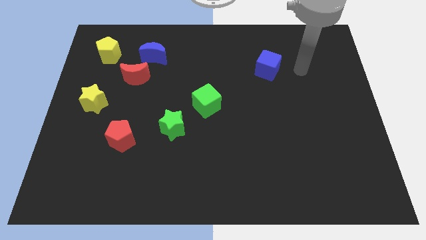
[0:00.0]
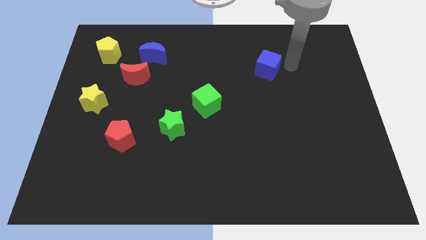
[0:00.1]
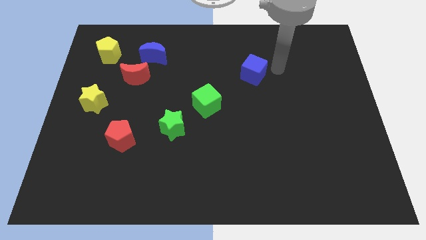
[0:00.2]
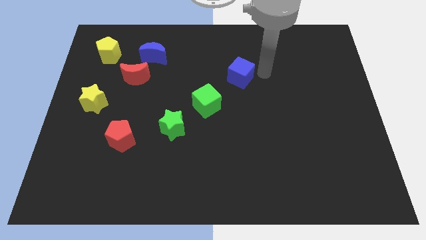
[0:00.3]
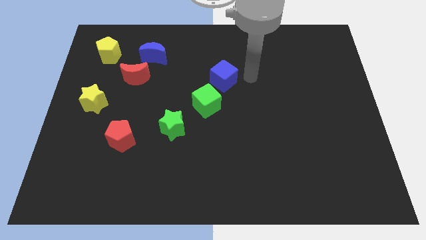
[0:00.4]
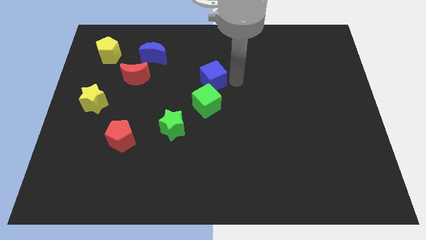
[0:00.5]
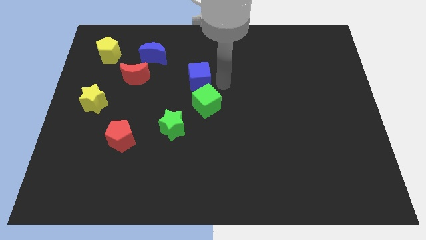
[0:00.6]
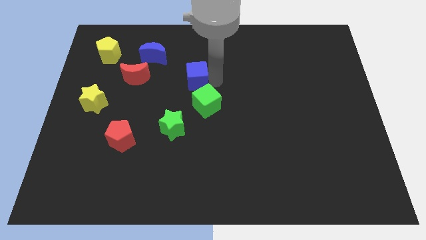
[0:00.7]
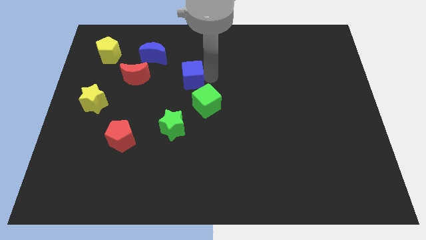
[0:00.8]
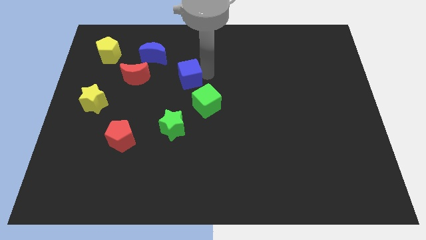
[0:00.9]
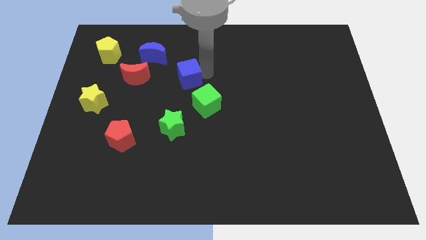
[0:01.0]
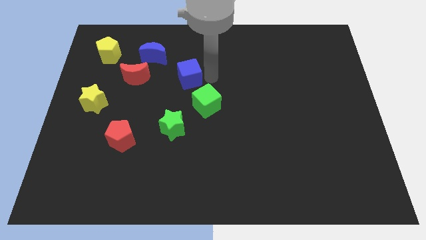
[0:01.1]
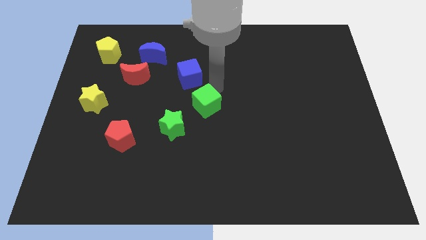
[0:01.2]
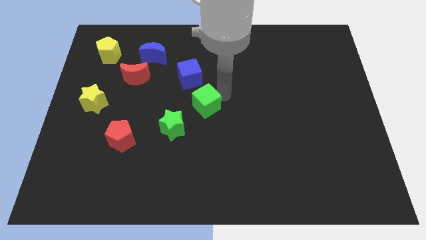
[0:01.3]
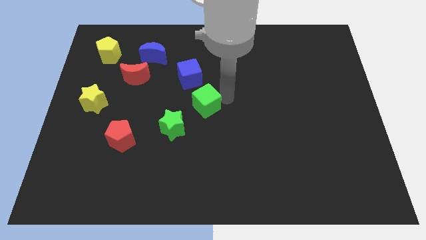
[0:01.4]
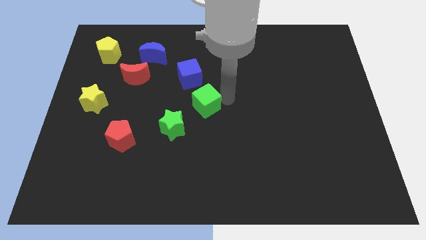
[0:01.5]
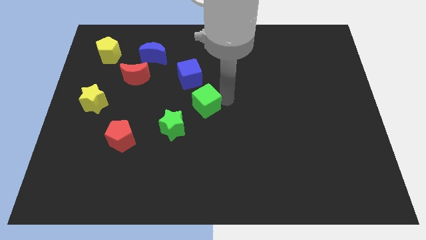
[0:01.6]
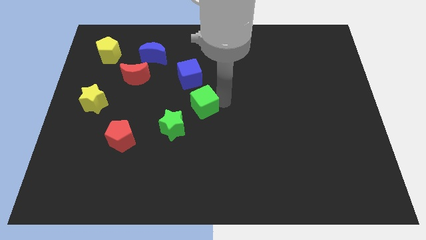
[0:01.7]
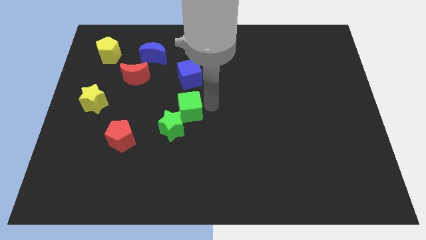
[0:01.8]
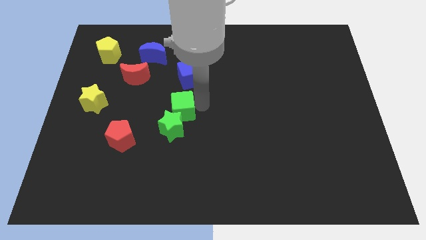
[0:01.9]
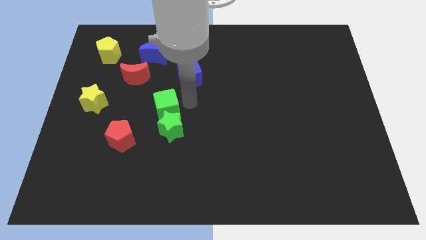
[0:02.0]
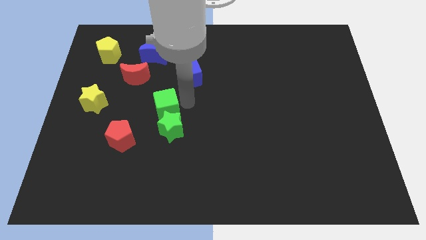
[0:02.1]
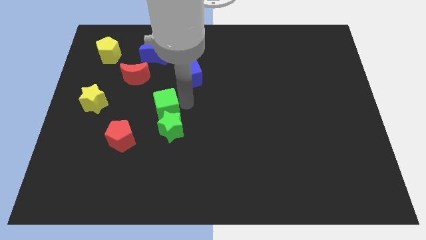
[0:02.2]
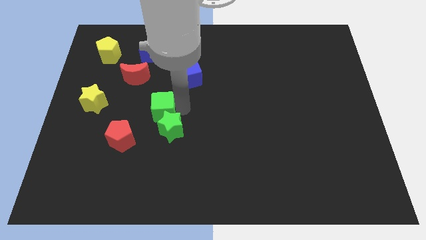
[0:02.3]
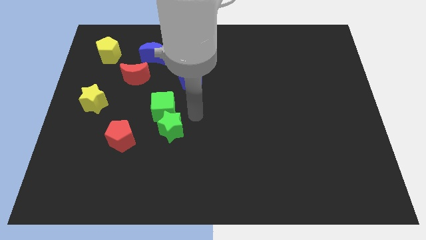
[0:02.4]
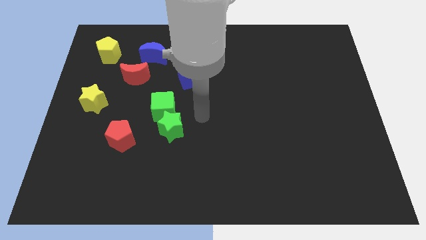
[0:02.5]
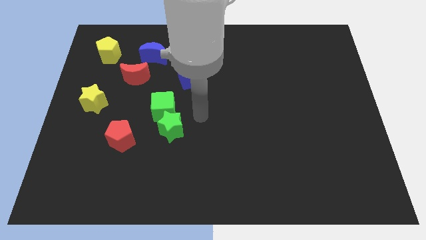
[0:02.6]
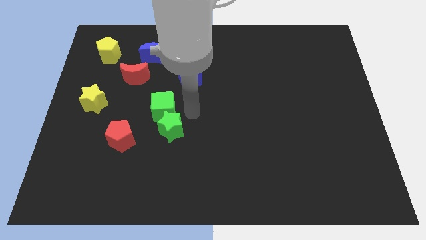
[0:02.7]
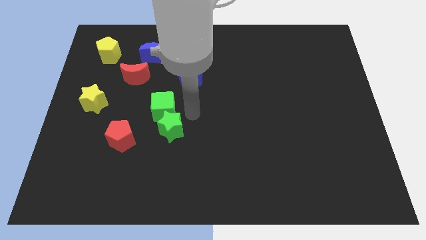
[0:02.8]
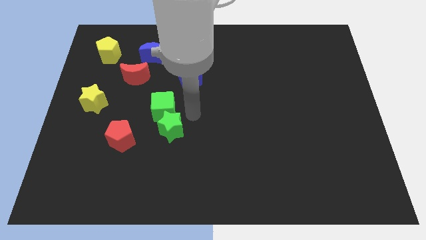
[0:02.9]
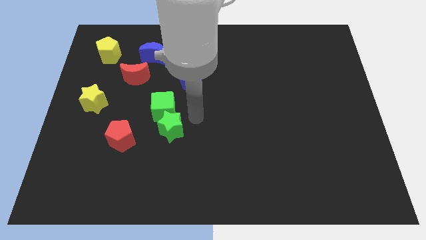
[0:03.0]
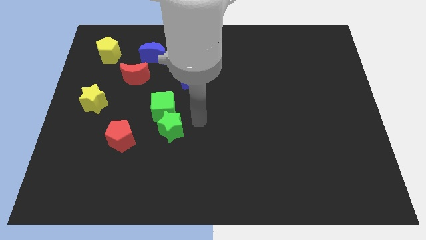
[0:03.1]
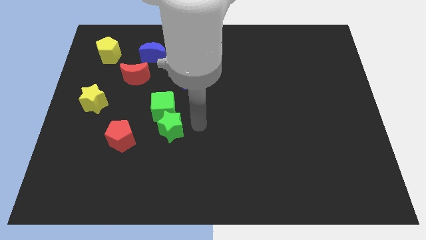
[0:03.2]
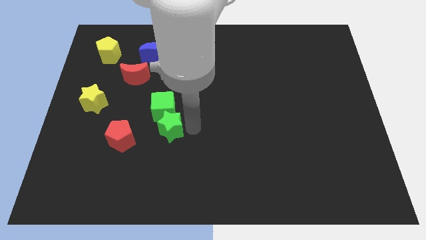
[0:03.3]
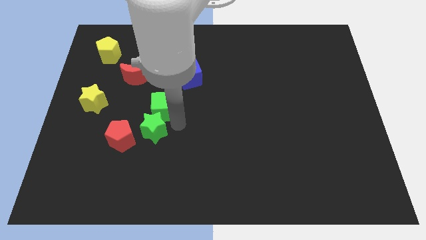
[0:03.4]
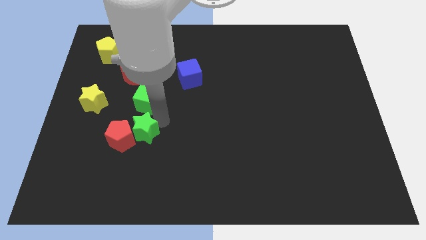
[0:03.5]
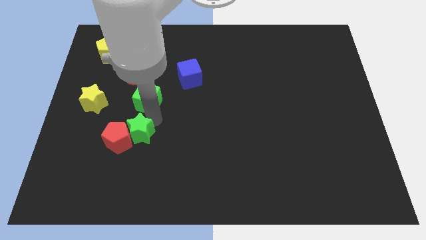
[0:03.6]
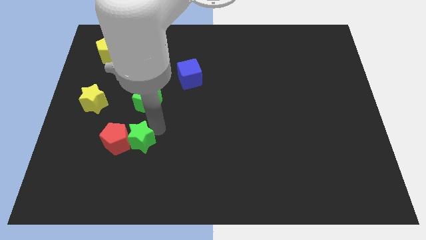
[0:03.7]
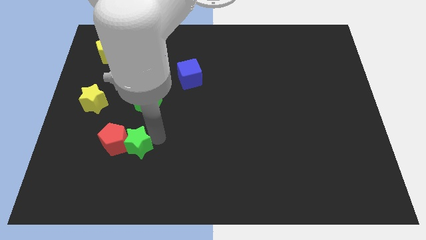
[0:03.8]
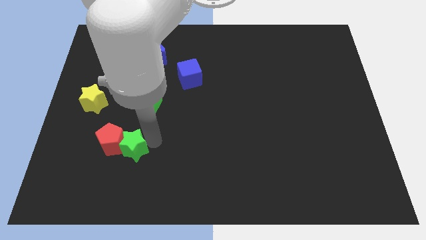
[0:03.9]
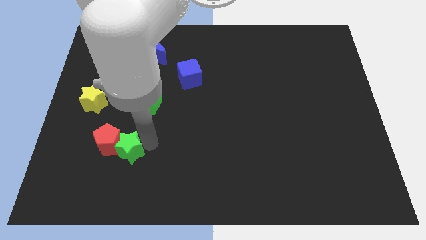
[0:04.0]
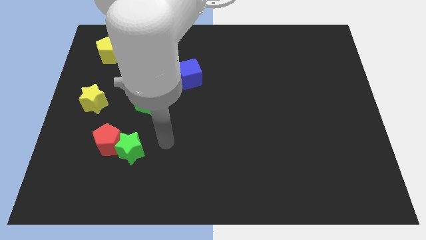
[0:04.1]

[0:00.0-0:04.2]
separate the green star and the green cube

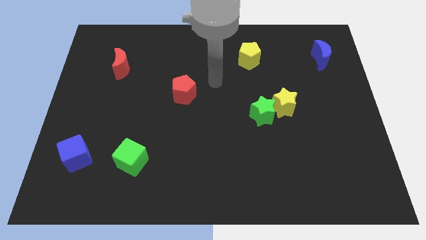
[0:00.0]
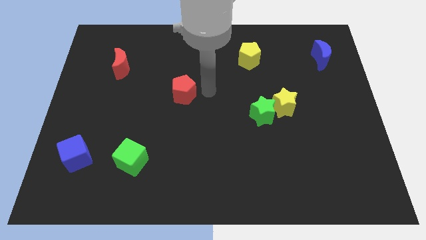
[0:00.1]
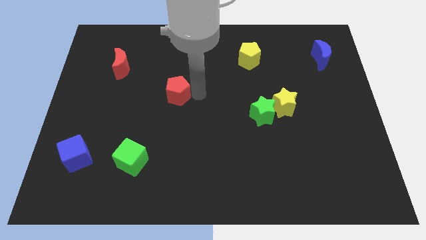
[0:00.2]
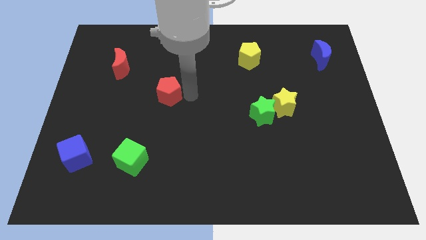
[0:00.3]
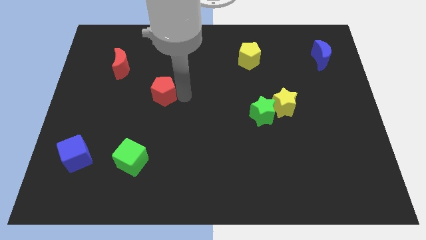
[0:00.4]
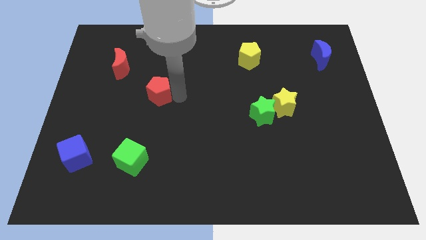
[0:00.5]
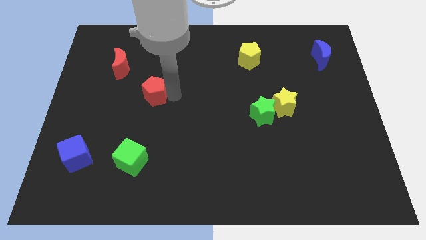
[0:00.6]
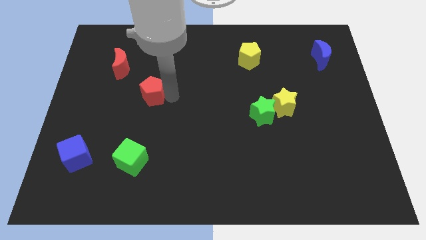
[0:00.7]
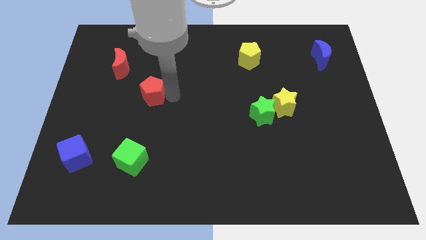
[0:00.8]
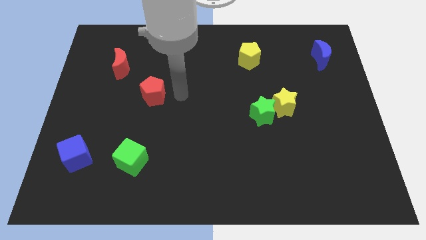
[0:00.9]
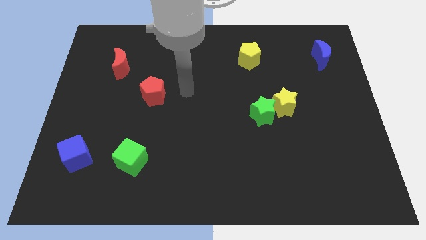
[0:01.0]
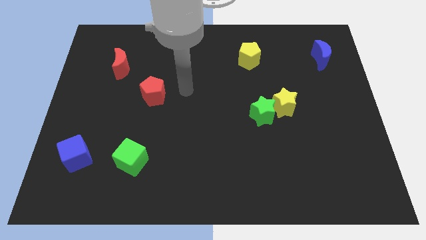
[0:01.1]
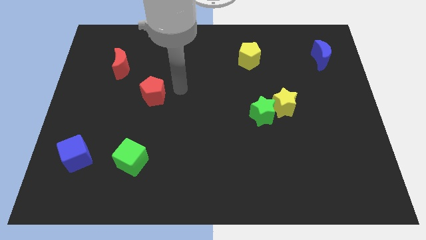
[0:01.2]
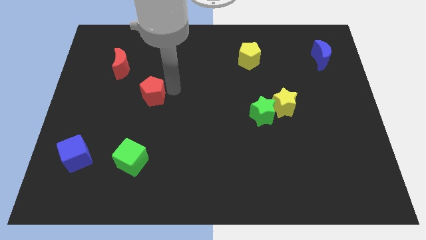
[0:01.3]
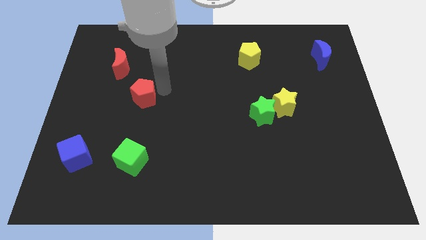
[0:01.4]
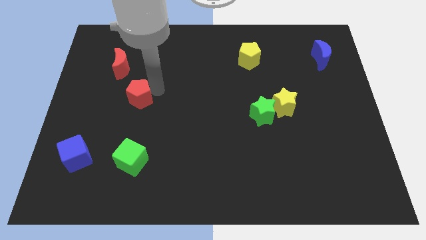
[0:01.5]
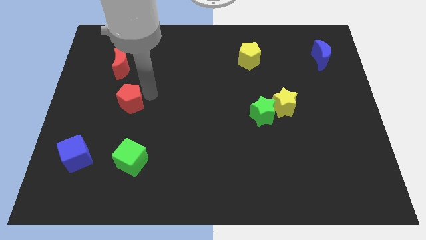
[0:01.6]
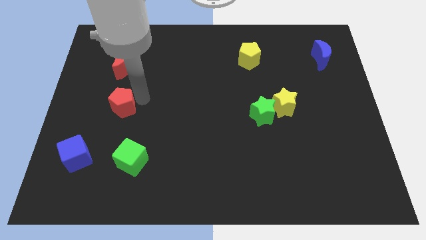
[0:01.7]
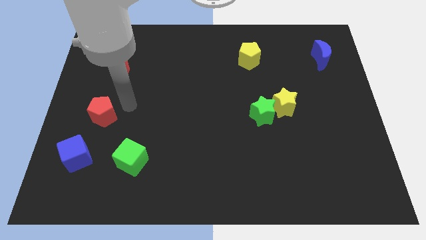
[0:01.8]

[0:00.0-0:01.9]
place the red pentagon below the red moon

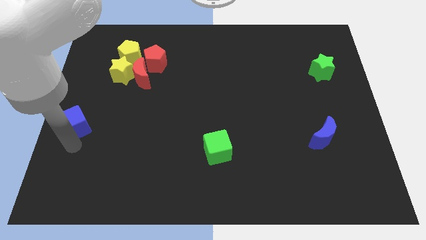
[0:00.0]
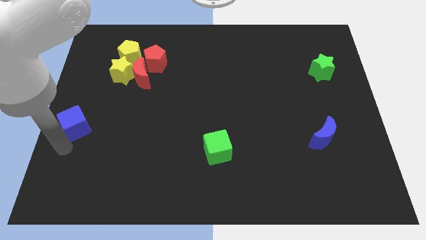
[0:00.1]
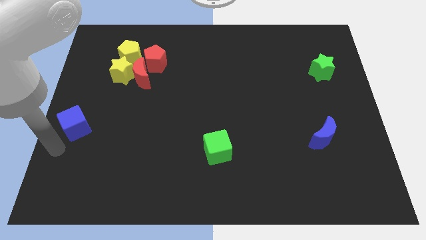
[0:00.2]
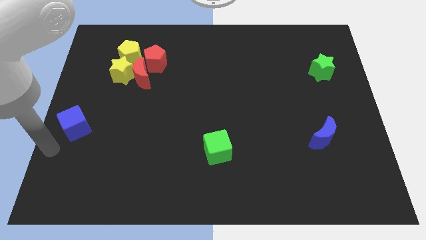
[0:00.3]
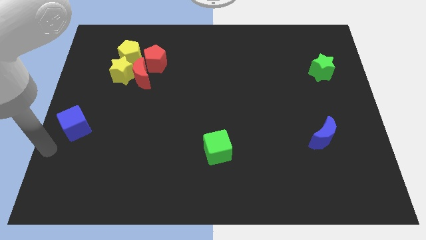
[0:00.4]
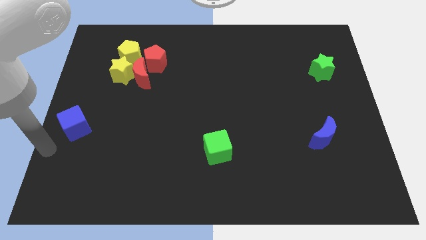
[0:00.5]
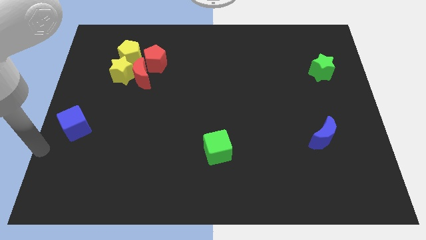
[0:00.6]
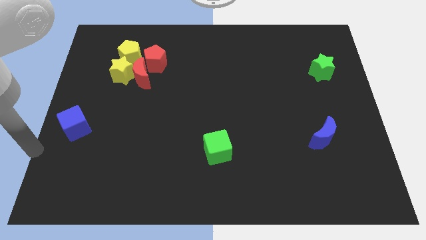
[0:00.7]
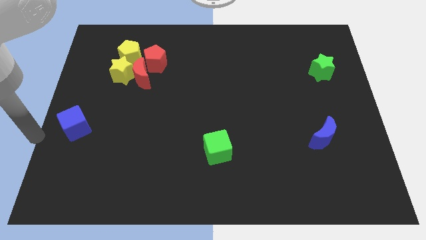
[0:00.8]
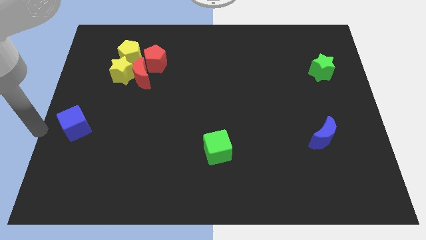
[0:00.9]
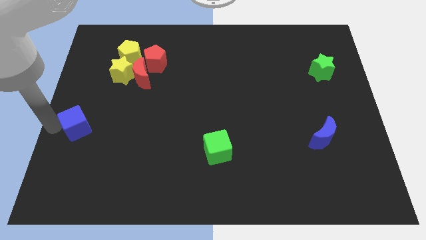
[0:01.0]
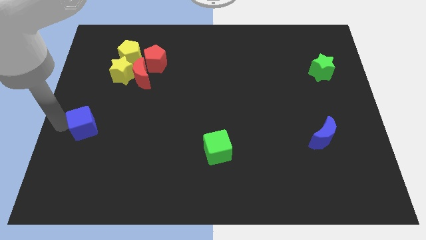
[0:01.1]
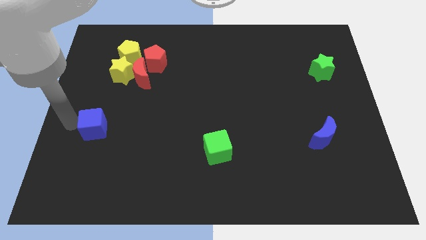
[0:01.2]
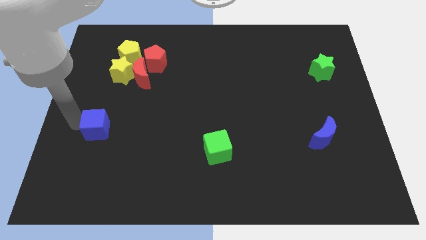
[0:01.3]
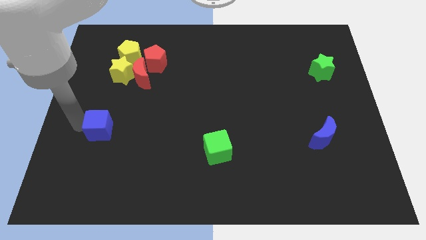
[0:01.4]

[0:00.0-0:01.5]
move the blue cube slightly to the right

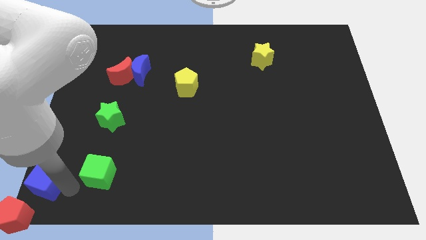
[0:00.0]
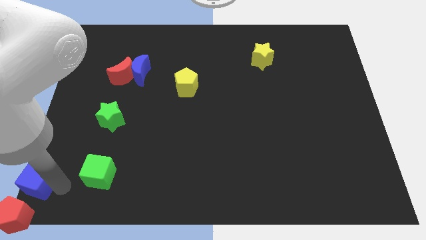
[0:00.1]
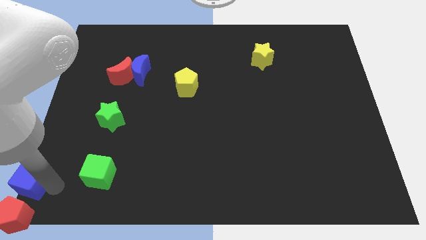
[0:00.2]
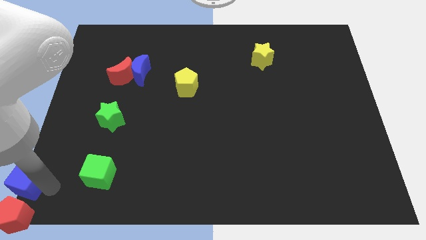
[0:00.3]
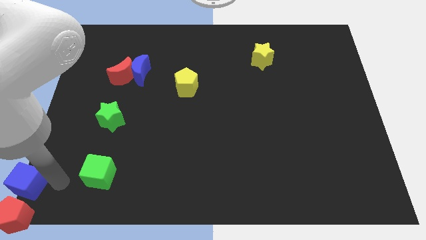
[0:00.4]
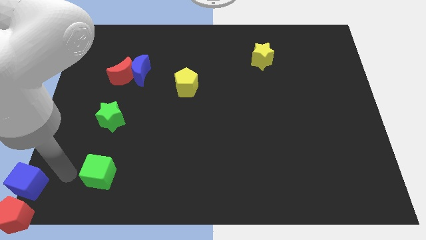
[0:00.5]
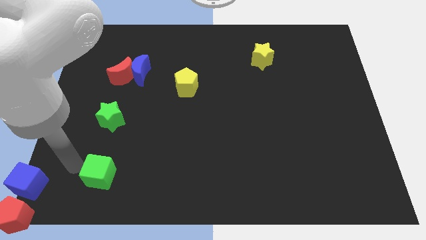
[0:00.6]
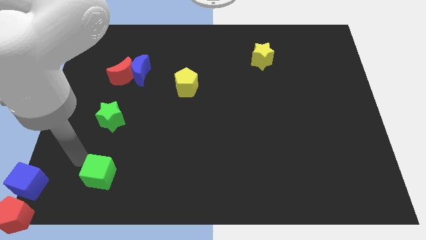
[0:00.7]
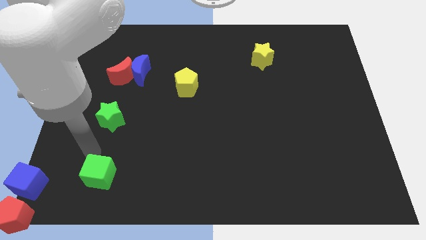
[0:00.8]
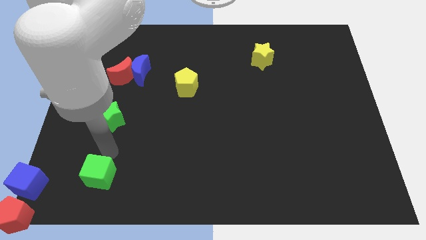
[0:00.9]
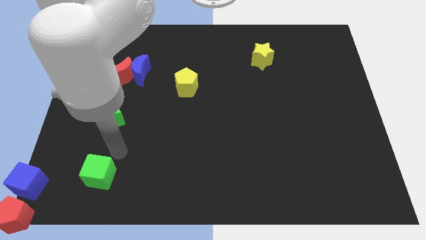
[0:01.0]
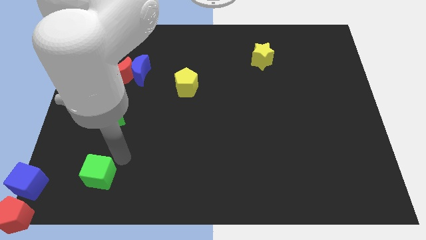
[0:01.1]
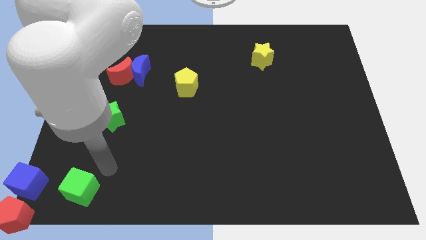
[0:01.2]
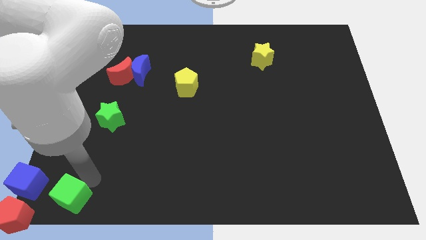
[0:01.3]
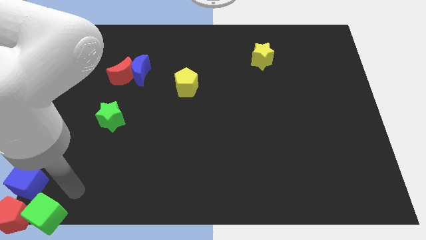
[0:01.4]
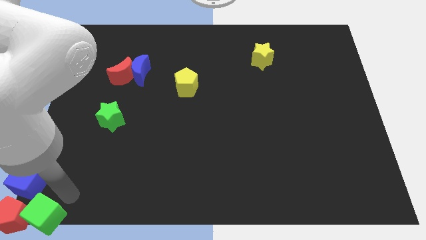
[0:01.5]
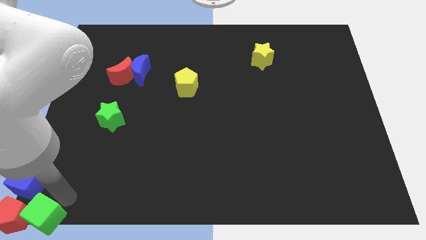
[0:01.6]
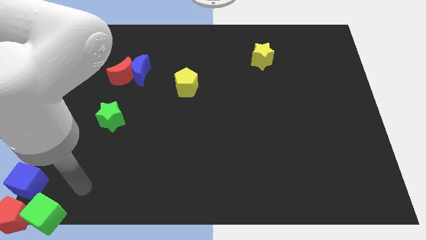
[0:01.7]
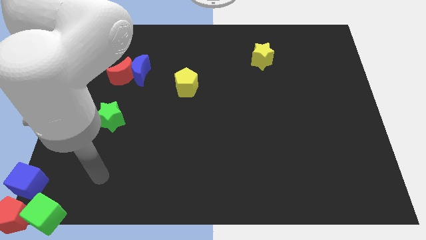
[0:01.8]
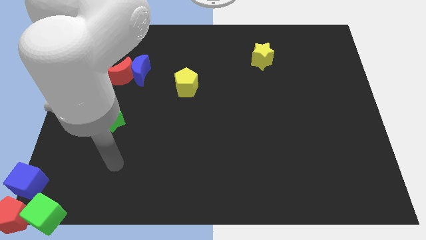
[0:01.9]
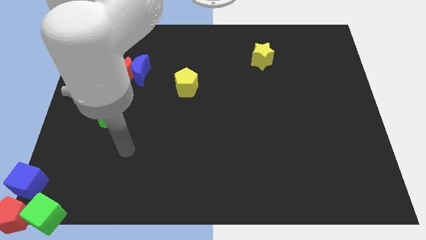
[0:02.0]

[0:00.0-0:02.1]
place the green cube at the right side of the red pentagon
